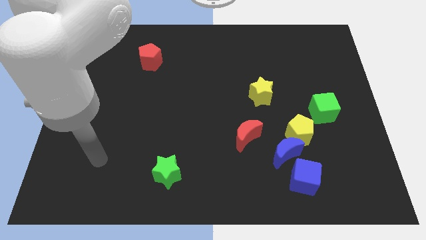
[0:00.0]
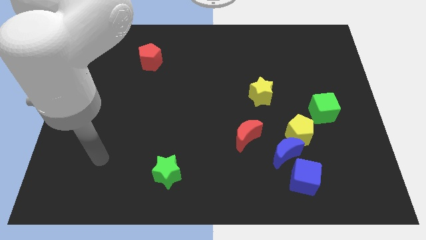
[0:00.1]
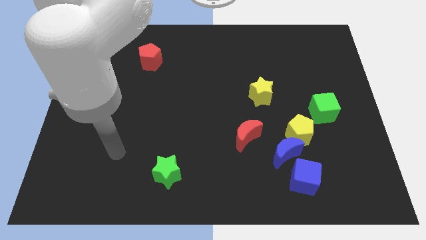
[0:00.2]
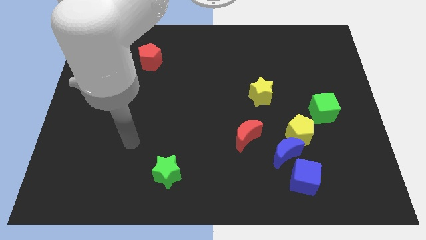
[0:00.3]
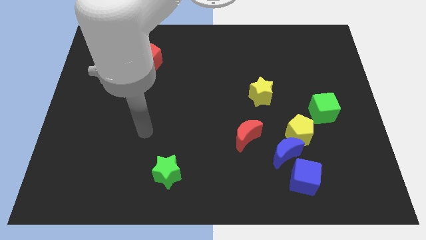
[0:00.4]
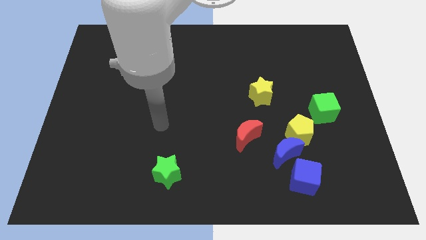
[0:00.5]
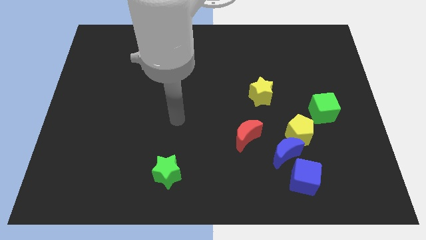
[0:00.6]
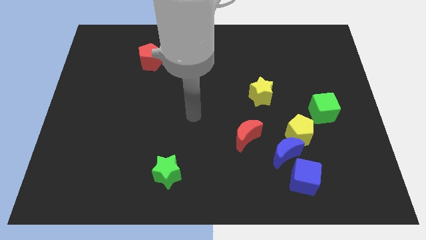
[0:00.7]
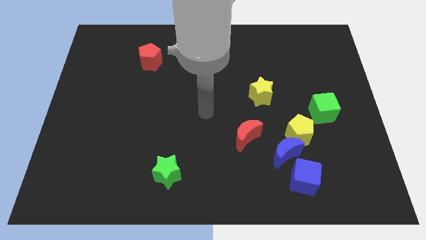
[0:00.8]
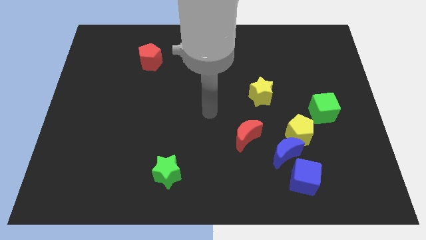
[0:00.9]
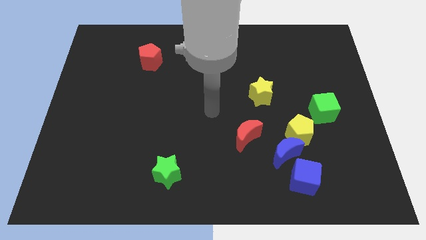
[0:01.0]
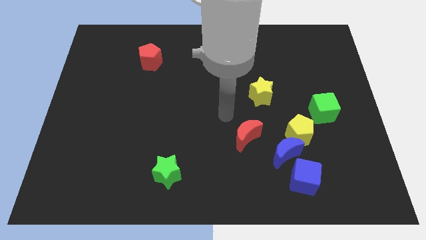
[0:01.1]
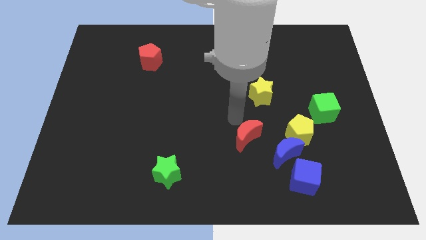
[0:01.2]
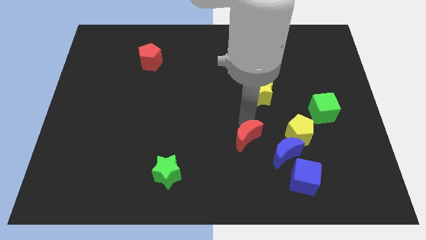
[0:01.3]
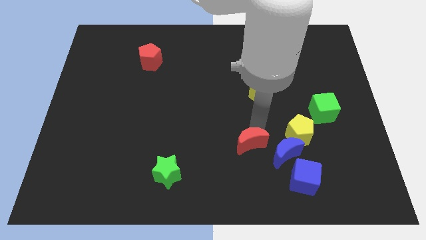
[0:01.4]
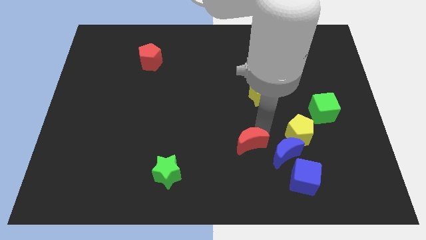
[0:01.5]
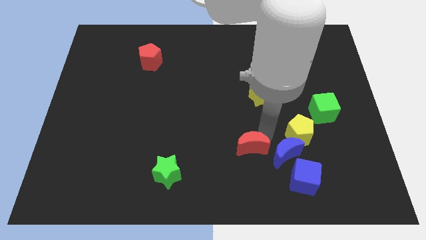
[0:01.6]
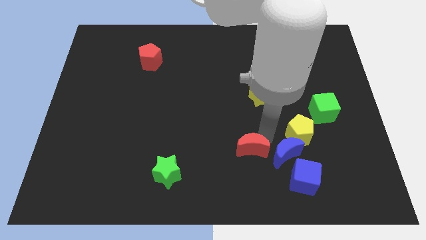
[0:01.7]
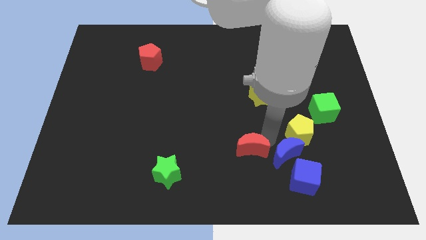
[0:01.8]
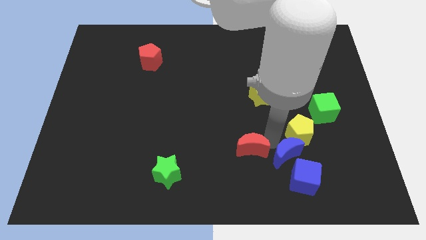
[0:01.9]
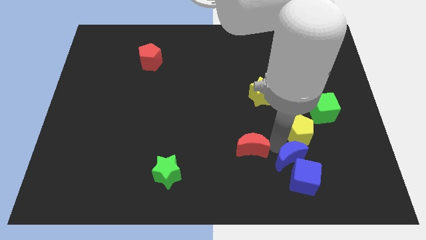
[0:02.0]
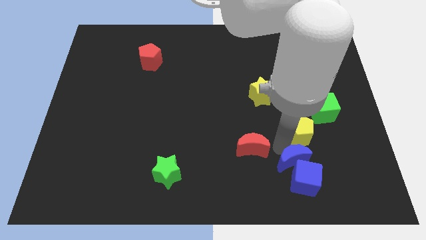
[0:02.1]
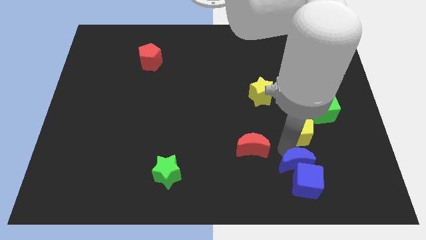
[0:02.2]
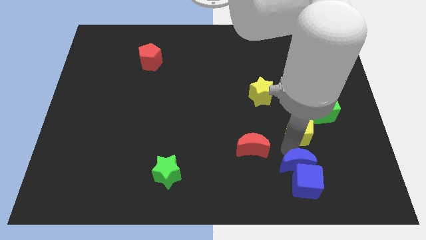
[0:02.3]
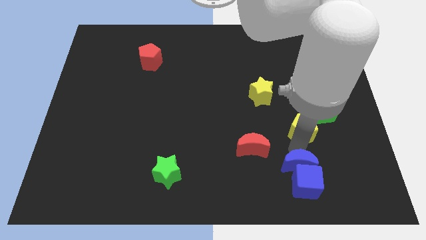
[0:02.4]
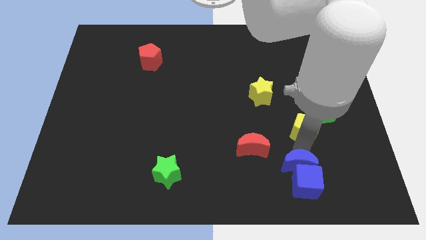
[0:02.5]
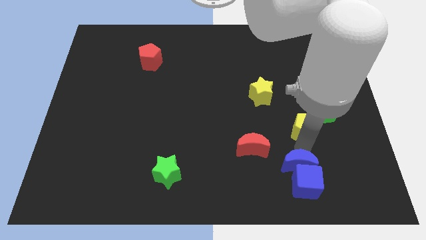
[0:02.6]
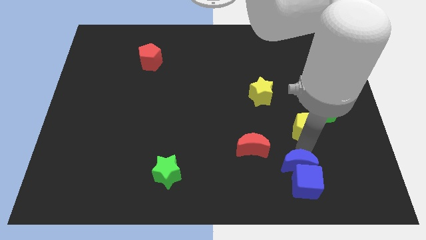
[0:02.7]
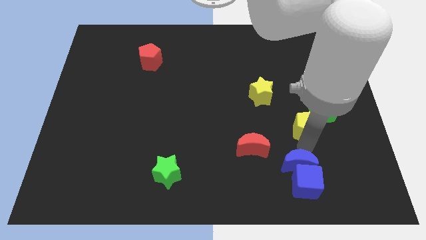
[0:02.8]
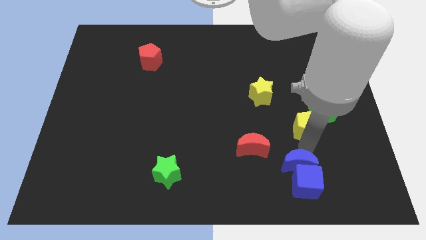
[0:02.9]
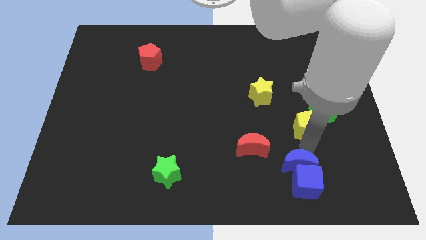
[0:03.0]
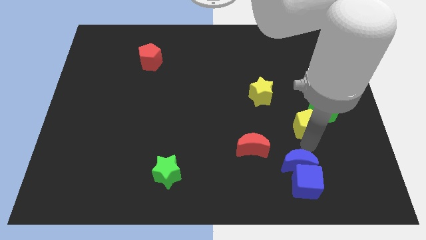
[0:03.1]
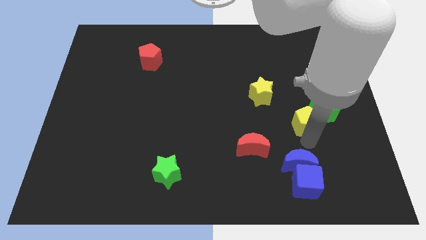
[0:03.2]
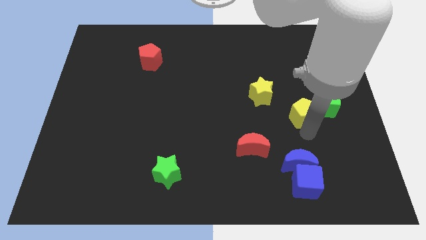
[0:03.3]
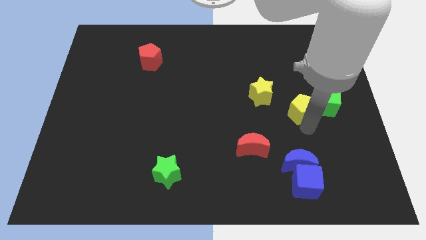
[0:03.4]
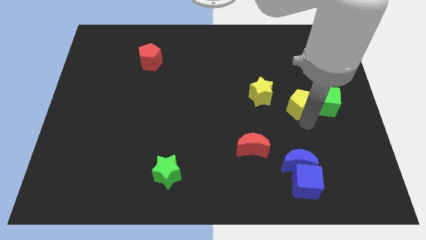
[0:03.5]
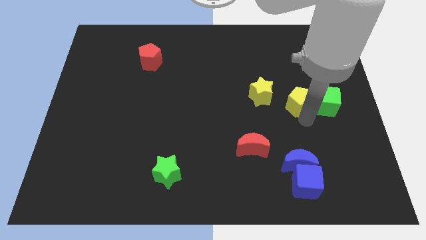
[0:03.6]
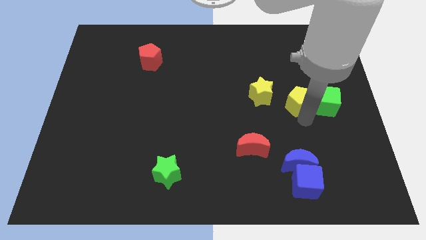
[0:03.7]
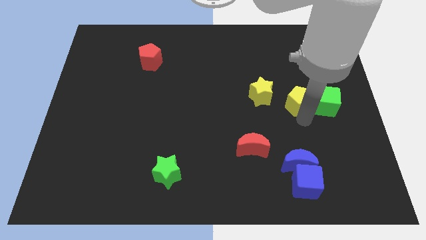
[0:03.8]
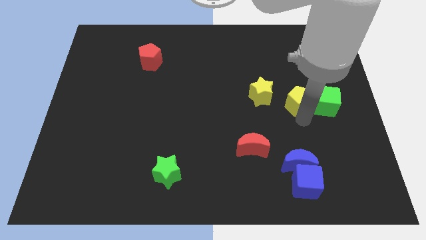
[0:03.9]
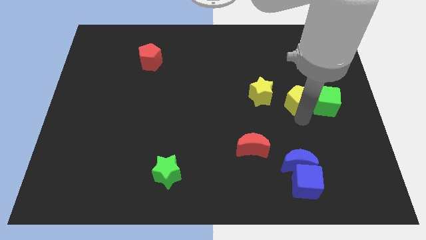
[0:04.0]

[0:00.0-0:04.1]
move your hand in between group of blocks to separate them

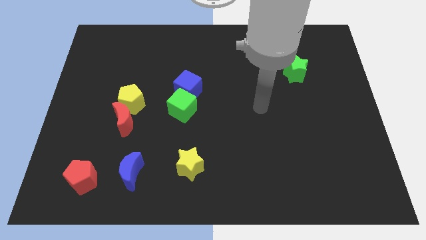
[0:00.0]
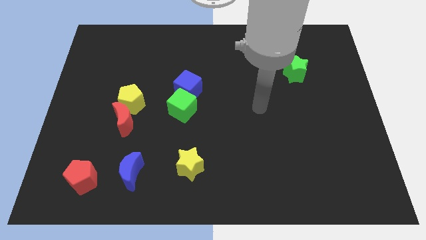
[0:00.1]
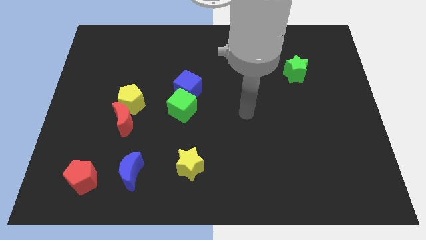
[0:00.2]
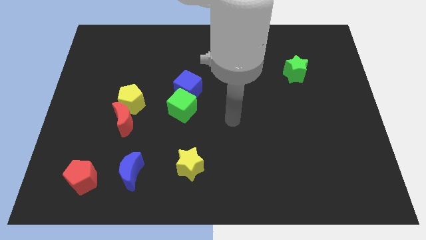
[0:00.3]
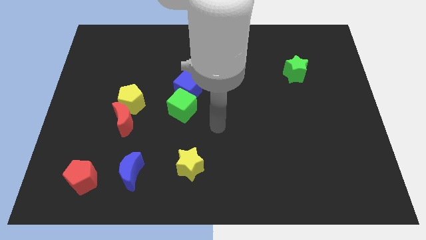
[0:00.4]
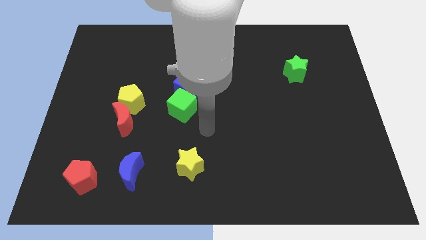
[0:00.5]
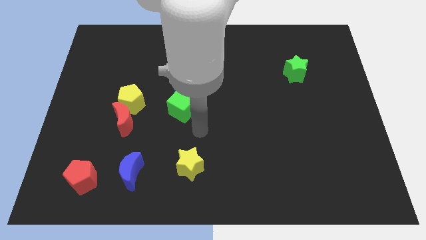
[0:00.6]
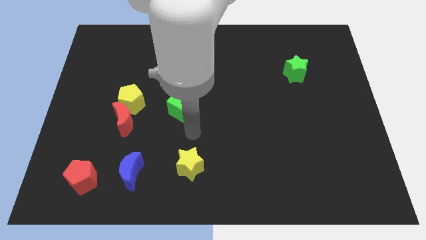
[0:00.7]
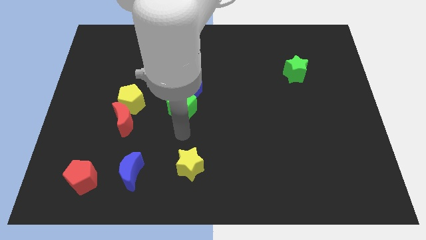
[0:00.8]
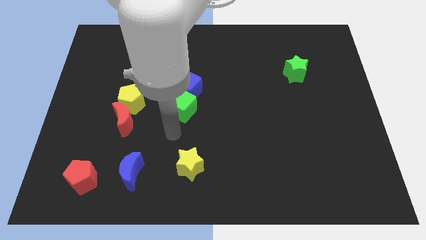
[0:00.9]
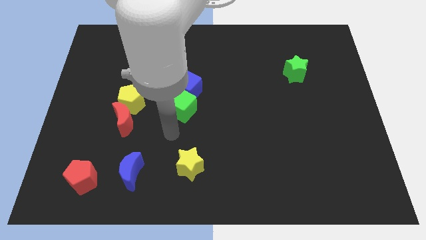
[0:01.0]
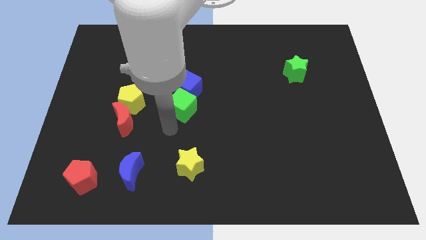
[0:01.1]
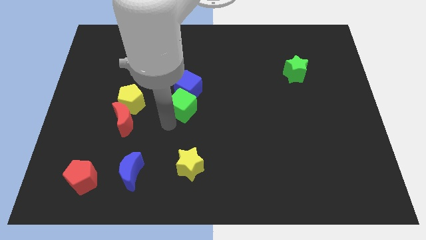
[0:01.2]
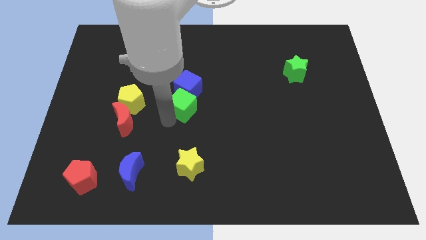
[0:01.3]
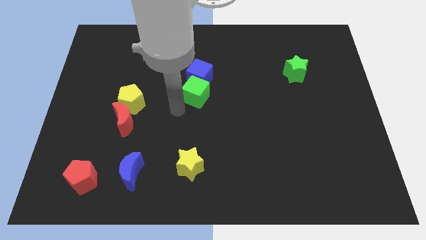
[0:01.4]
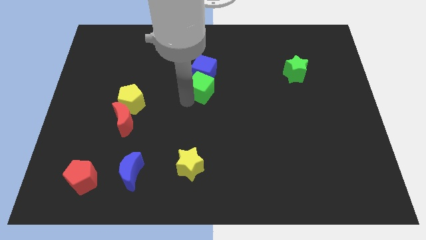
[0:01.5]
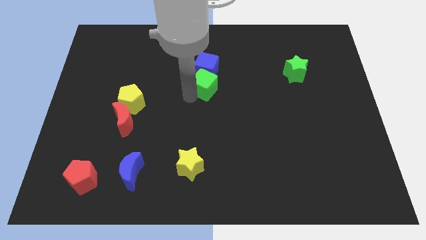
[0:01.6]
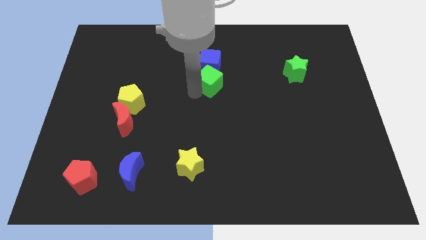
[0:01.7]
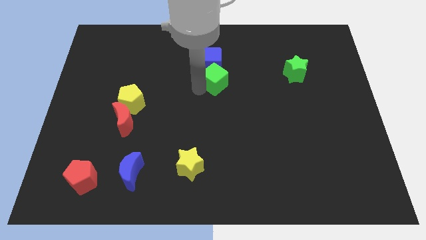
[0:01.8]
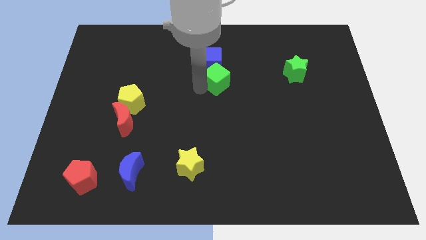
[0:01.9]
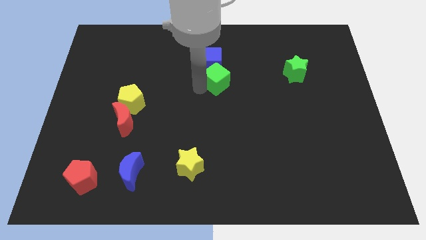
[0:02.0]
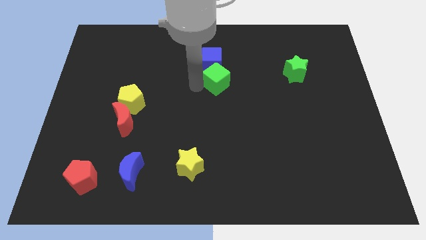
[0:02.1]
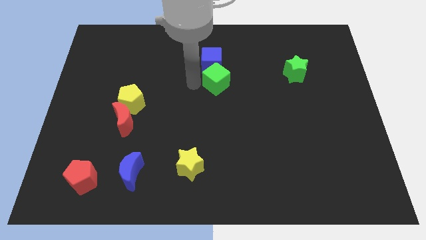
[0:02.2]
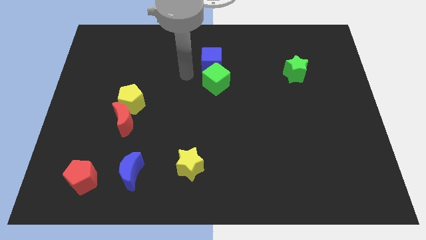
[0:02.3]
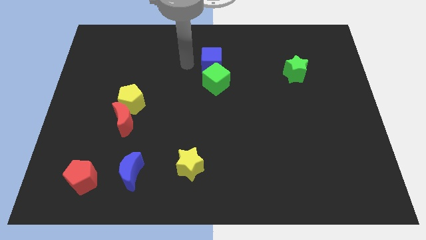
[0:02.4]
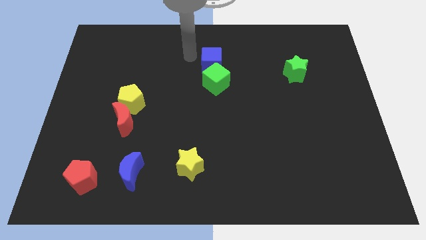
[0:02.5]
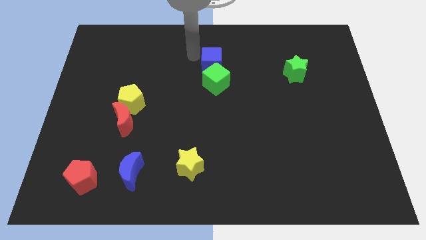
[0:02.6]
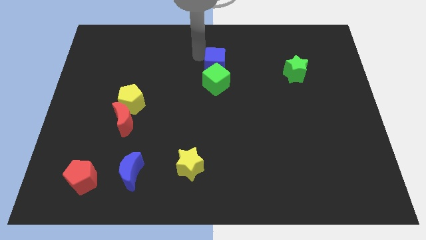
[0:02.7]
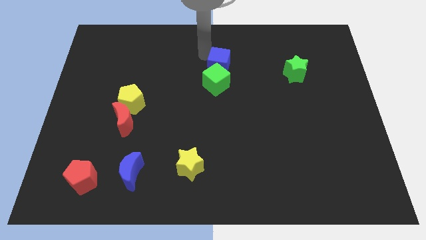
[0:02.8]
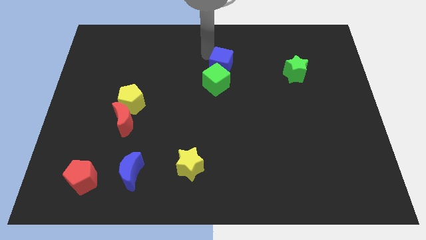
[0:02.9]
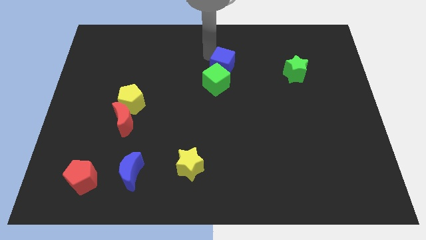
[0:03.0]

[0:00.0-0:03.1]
move the green cube slightly to the top center along with the blue cube

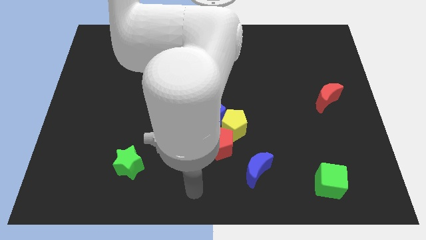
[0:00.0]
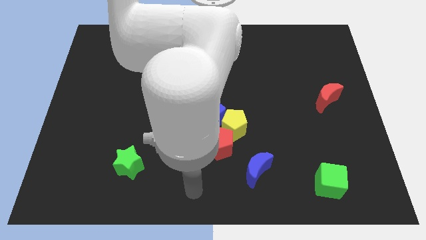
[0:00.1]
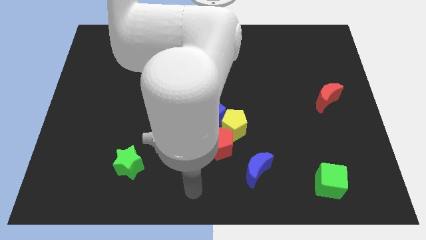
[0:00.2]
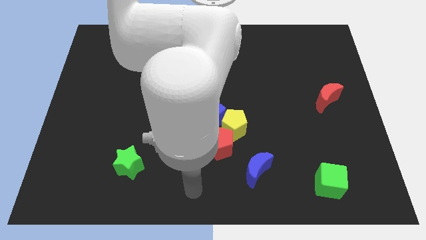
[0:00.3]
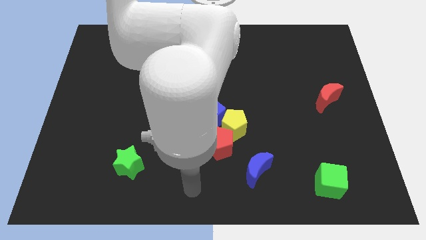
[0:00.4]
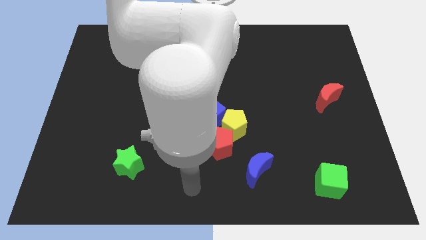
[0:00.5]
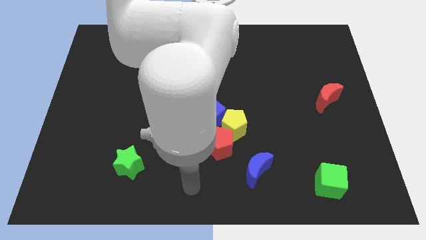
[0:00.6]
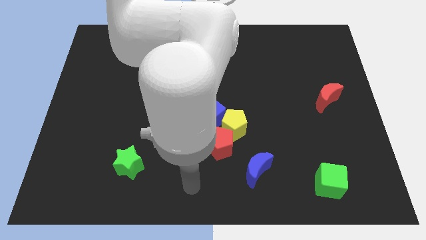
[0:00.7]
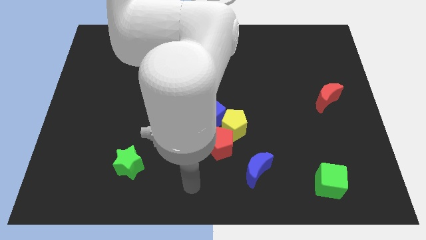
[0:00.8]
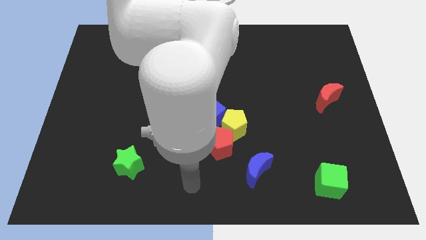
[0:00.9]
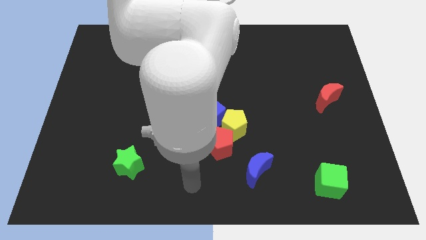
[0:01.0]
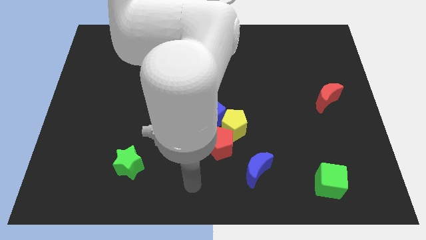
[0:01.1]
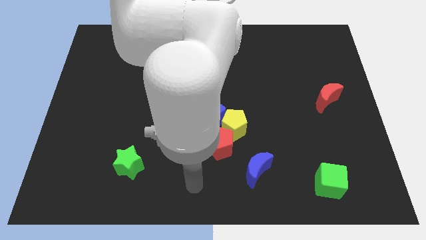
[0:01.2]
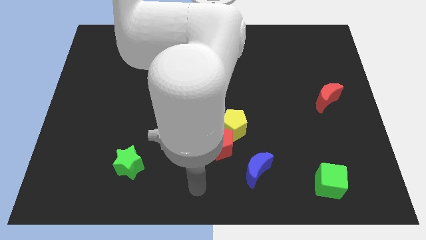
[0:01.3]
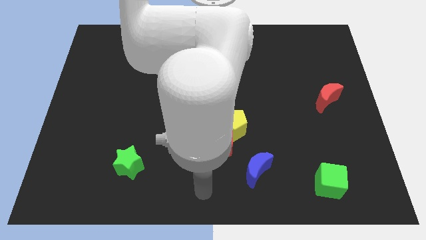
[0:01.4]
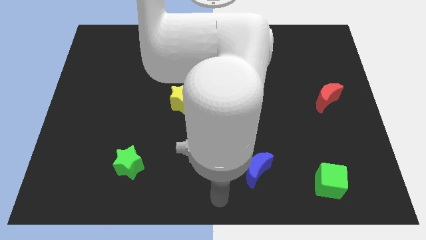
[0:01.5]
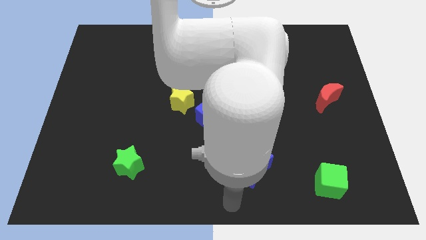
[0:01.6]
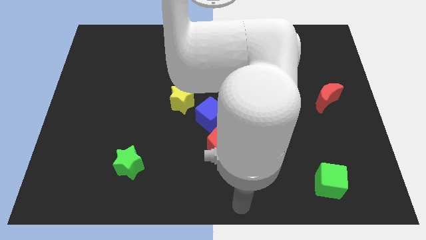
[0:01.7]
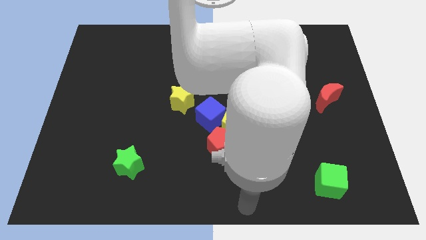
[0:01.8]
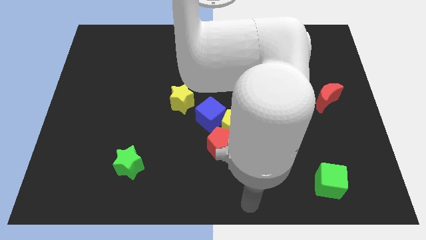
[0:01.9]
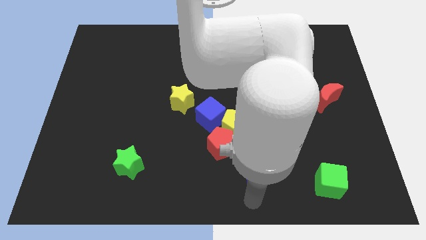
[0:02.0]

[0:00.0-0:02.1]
move your arm to the bottom of the blue crescent
